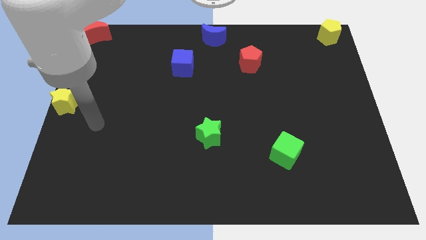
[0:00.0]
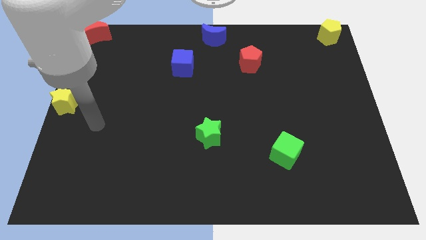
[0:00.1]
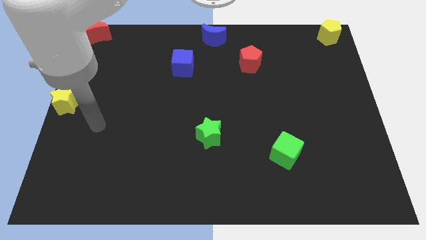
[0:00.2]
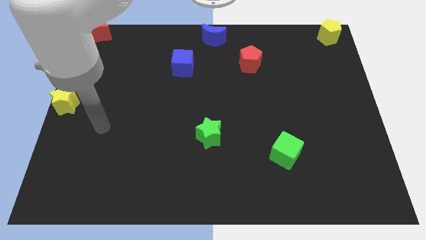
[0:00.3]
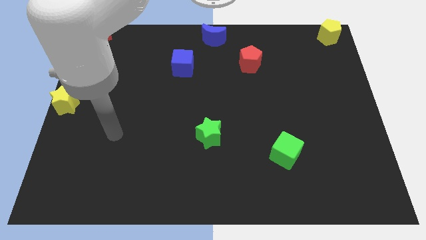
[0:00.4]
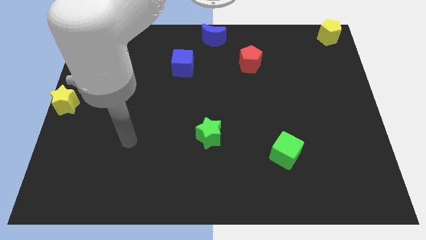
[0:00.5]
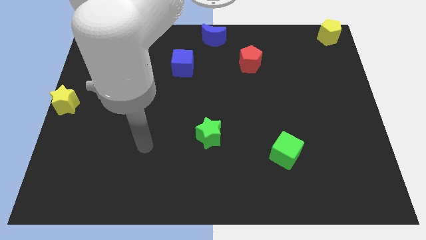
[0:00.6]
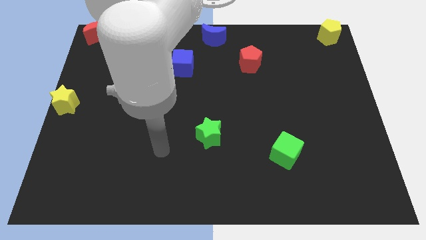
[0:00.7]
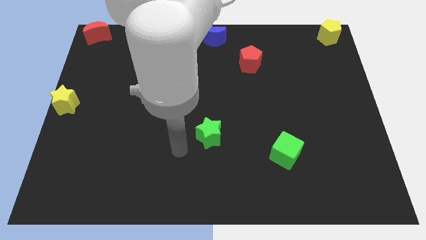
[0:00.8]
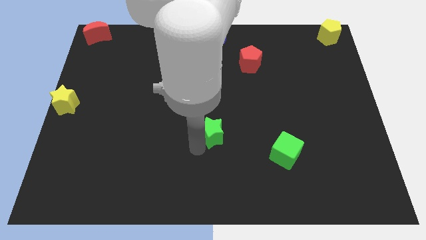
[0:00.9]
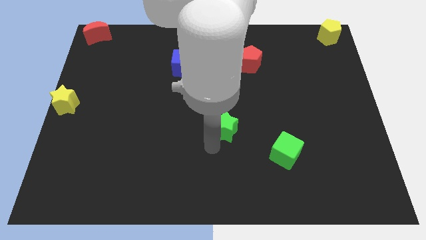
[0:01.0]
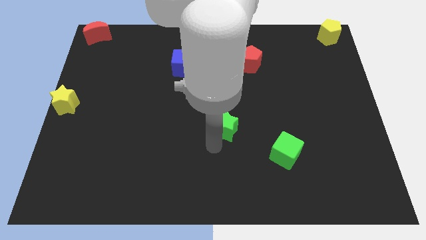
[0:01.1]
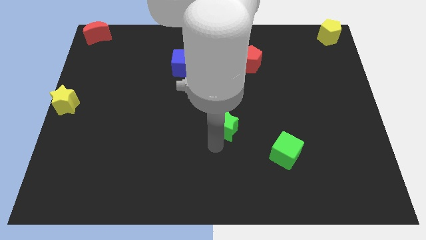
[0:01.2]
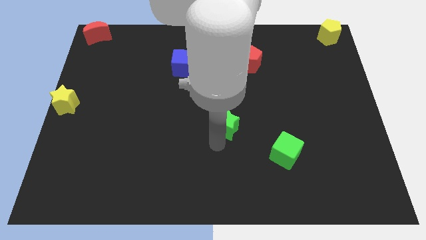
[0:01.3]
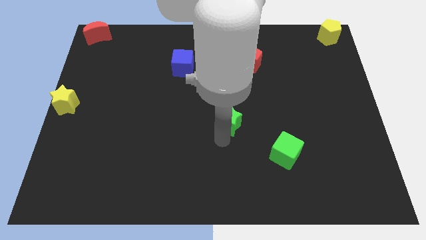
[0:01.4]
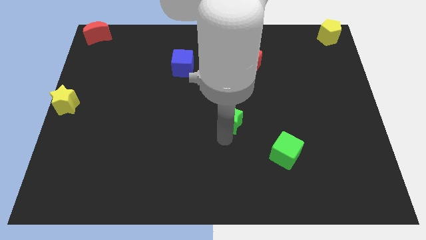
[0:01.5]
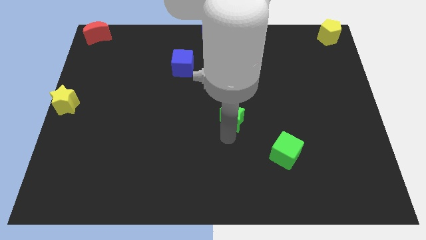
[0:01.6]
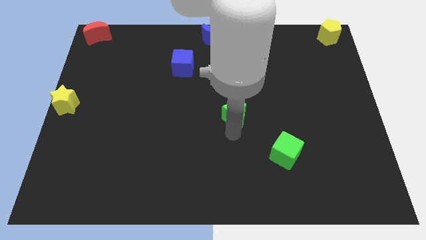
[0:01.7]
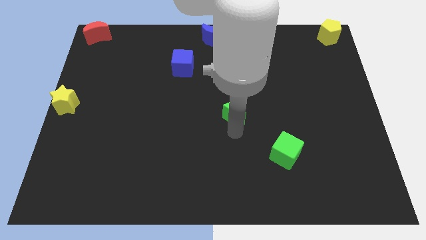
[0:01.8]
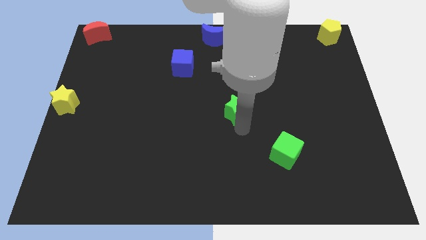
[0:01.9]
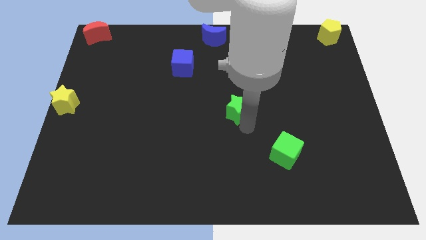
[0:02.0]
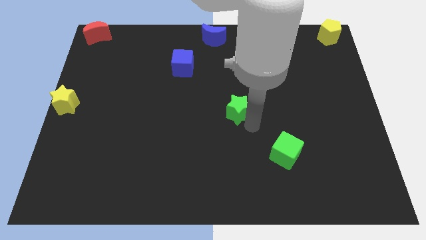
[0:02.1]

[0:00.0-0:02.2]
place the green star between the green cube and blue cube

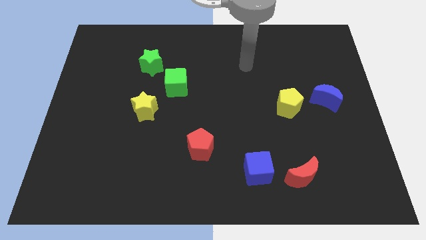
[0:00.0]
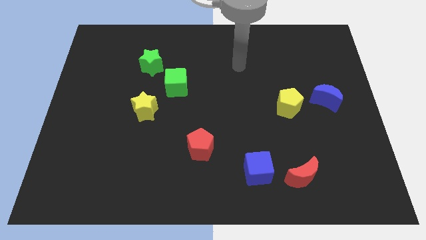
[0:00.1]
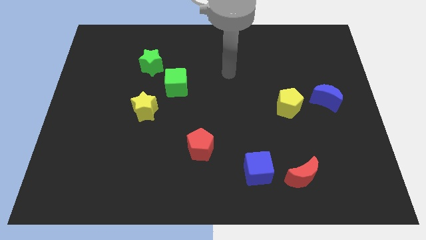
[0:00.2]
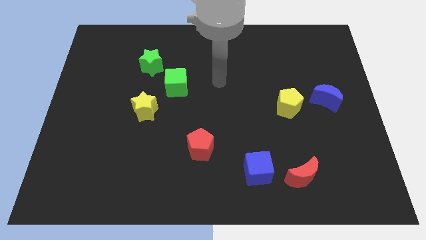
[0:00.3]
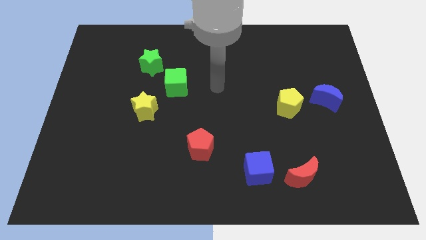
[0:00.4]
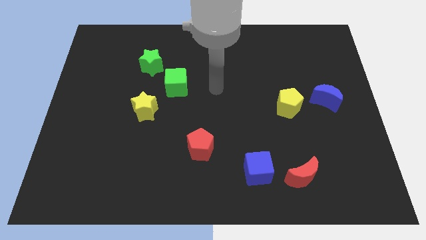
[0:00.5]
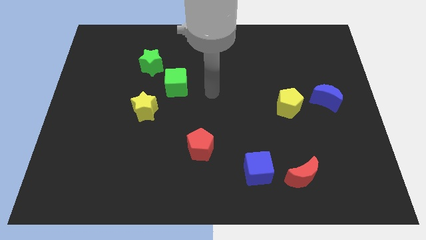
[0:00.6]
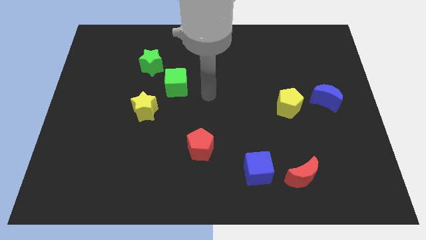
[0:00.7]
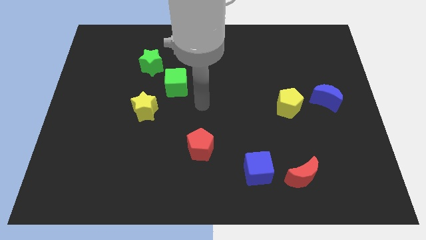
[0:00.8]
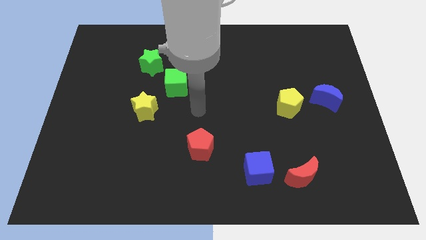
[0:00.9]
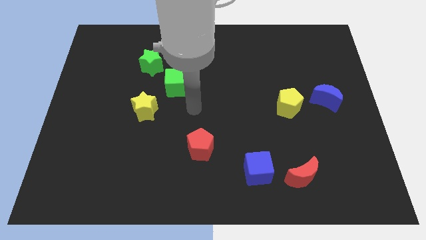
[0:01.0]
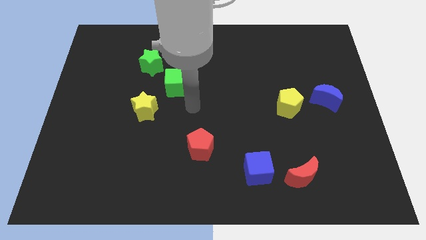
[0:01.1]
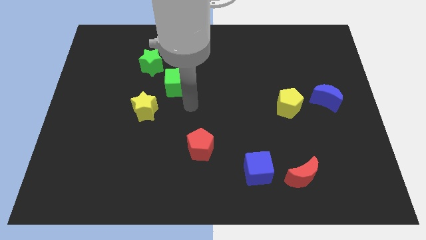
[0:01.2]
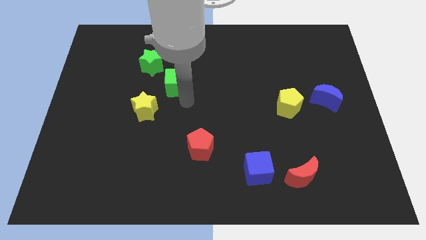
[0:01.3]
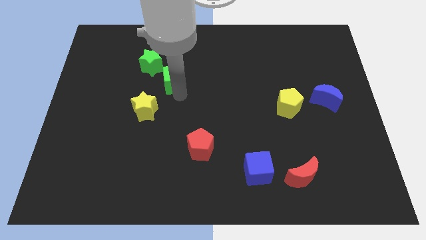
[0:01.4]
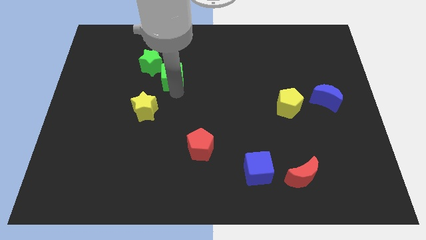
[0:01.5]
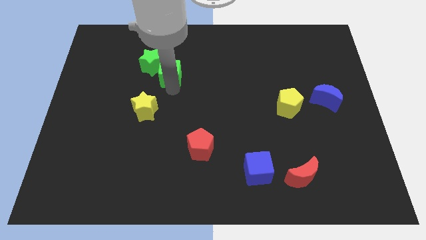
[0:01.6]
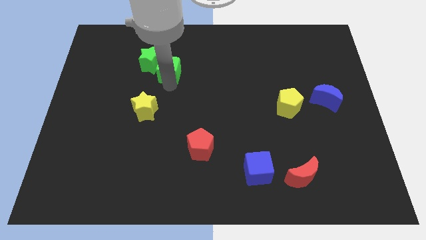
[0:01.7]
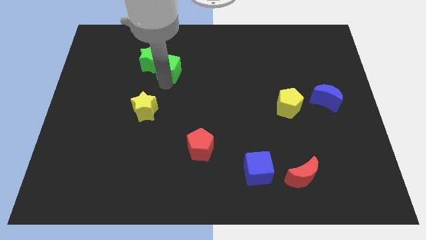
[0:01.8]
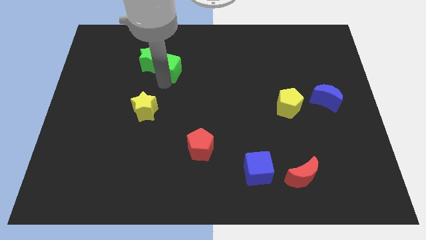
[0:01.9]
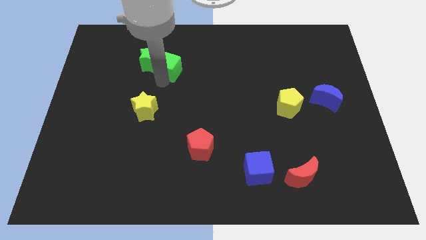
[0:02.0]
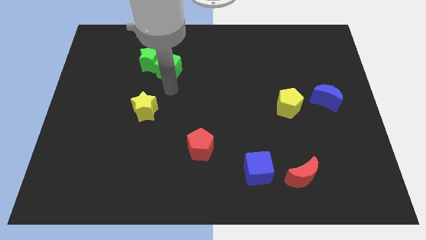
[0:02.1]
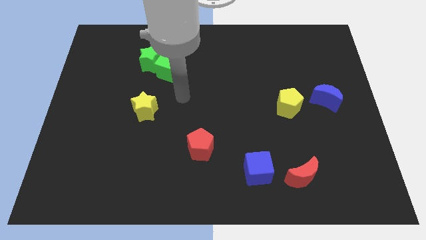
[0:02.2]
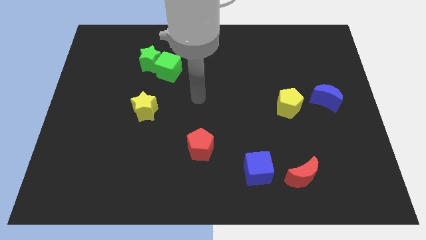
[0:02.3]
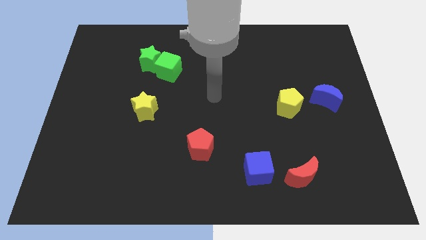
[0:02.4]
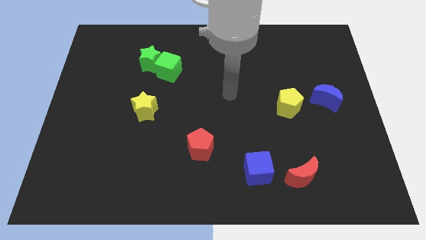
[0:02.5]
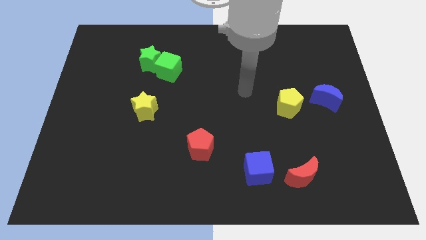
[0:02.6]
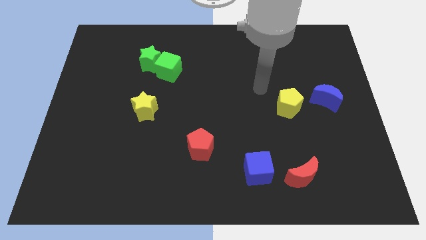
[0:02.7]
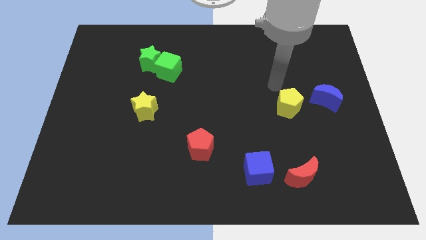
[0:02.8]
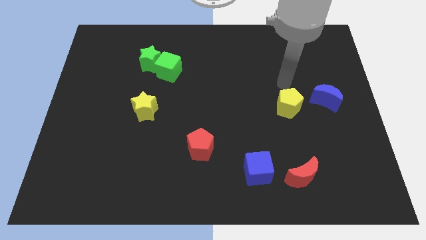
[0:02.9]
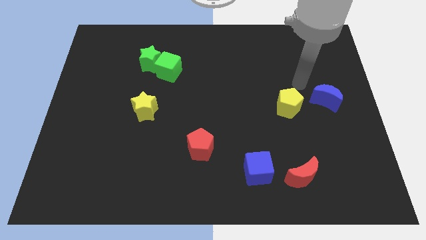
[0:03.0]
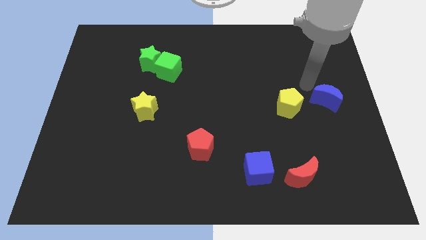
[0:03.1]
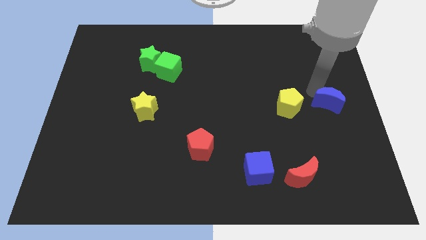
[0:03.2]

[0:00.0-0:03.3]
push the green cube towards the diagonal bottom right corner of the green star

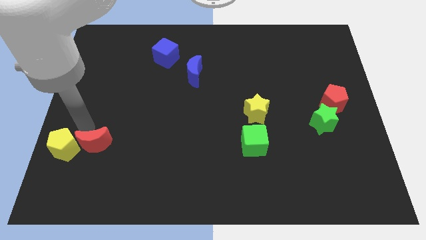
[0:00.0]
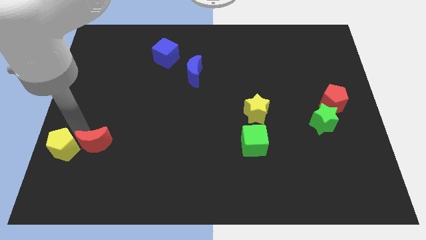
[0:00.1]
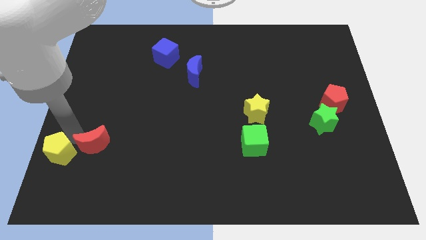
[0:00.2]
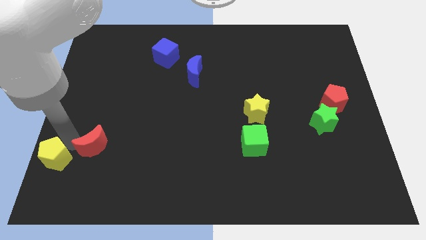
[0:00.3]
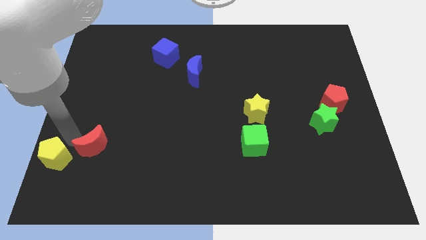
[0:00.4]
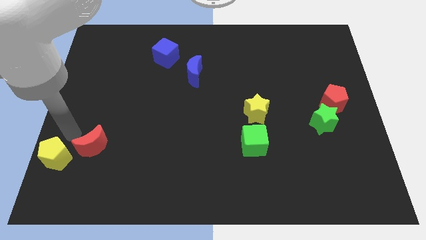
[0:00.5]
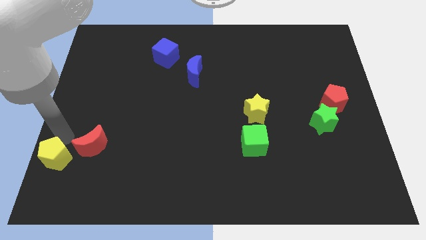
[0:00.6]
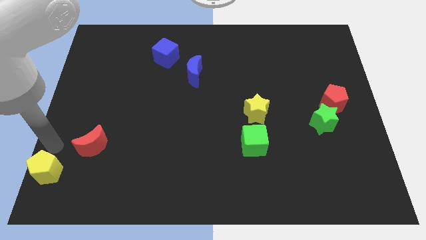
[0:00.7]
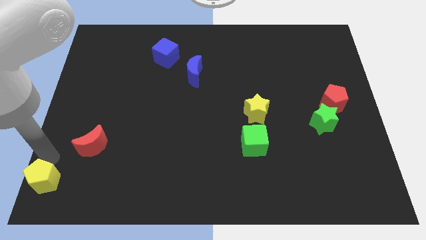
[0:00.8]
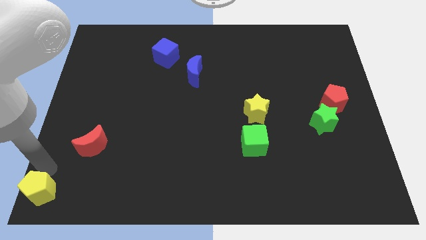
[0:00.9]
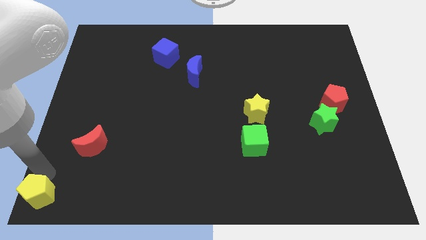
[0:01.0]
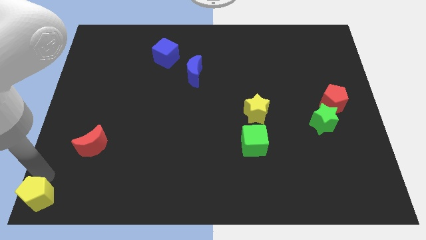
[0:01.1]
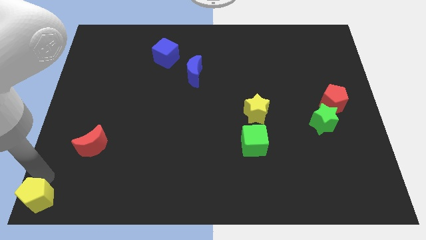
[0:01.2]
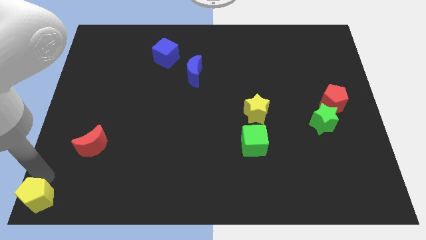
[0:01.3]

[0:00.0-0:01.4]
move the yellow pentagon towards the bottom left

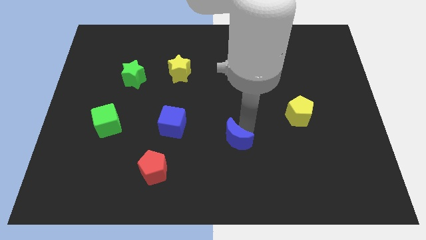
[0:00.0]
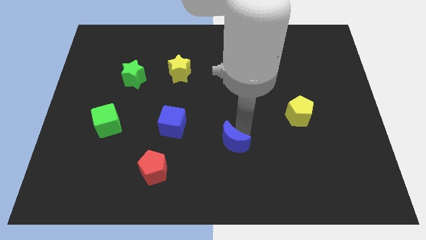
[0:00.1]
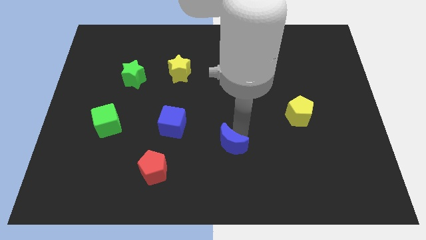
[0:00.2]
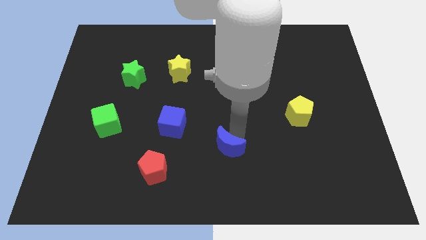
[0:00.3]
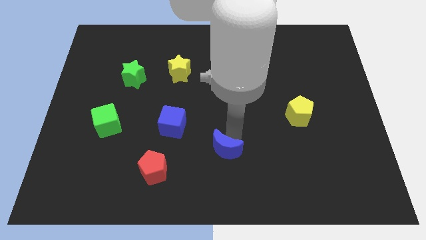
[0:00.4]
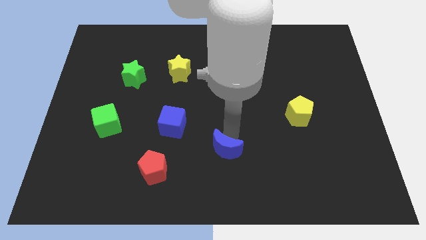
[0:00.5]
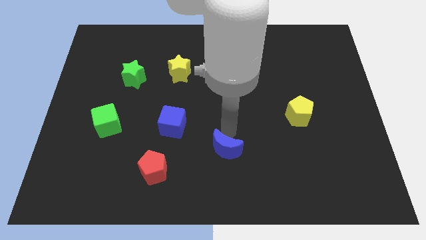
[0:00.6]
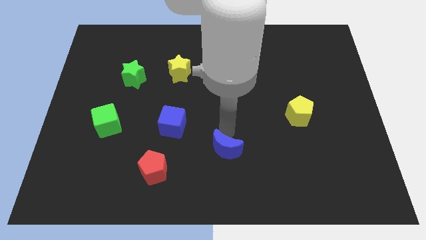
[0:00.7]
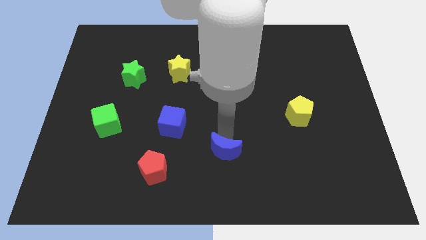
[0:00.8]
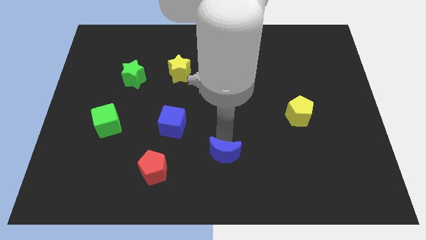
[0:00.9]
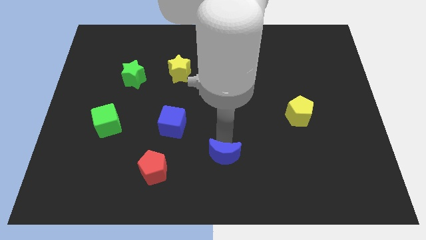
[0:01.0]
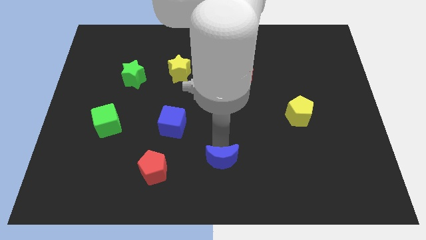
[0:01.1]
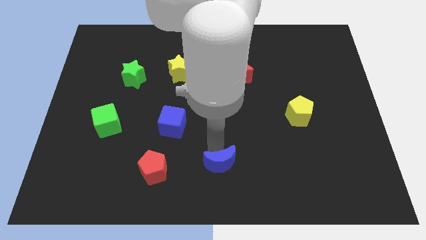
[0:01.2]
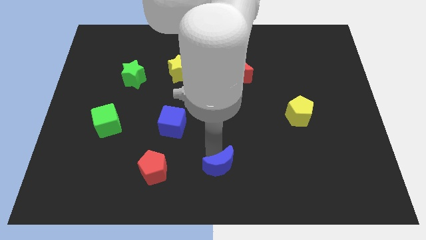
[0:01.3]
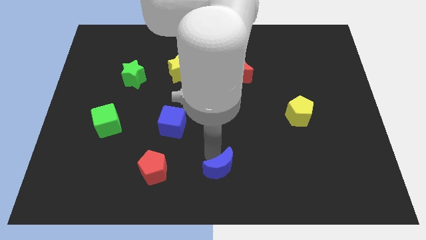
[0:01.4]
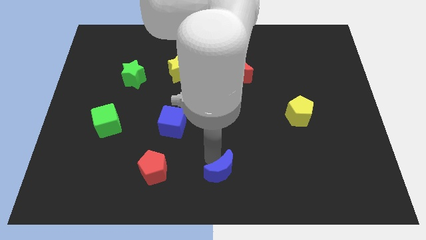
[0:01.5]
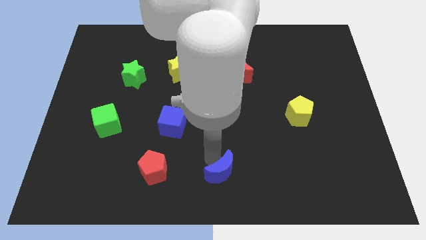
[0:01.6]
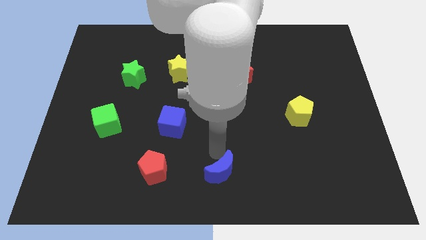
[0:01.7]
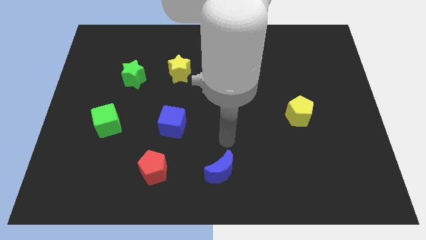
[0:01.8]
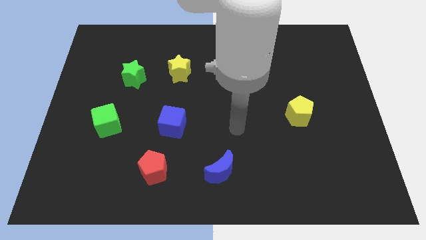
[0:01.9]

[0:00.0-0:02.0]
push the blue moon to the right of the red pentagon

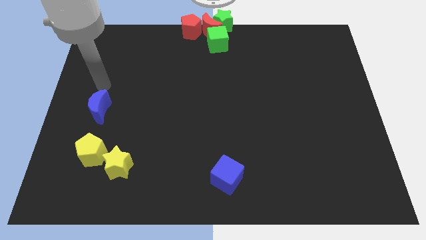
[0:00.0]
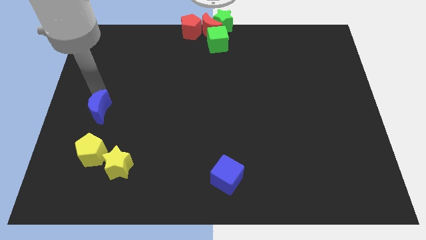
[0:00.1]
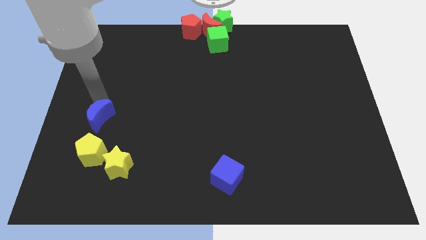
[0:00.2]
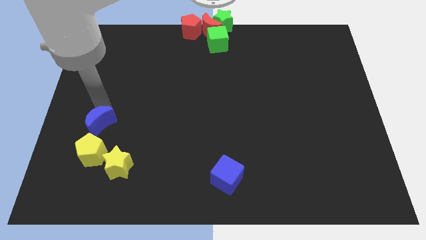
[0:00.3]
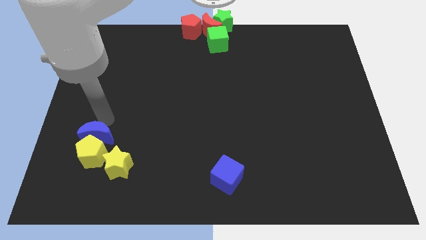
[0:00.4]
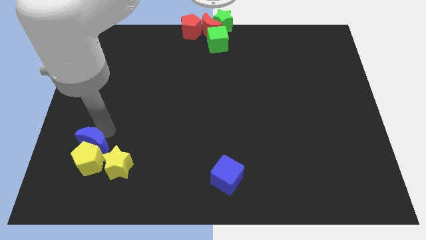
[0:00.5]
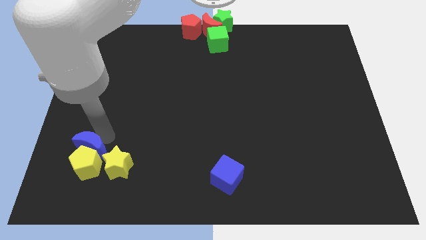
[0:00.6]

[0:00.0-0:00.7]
push the blue moon into the yellow pentagon
